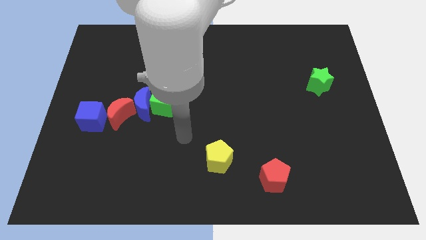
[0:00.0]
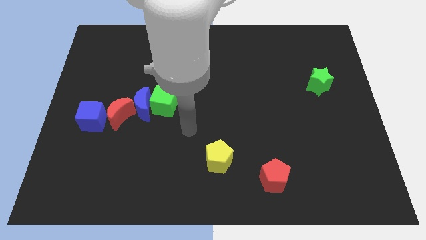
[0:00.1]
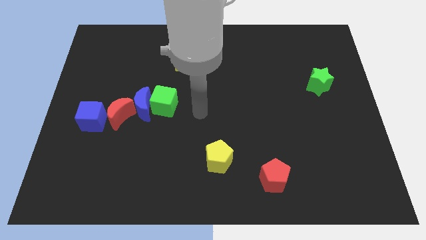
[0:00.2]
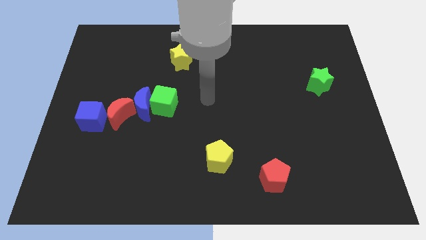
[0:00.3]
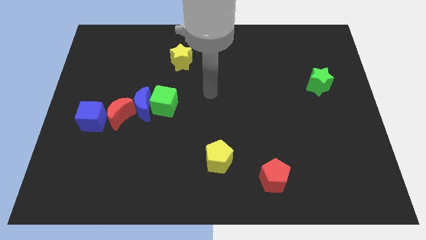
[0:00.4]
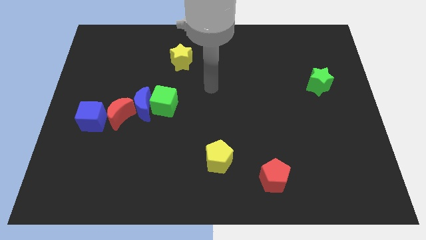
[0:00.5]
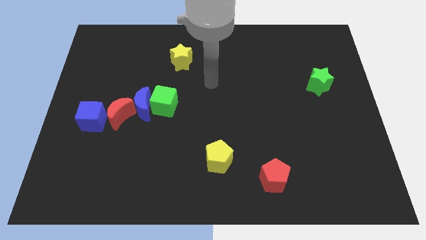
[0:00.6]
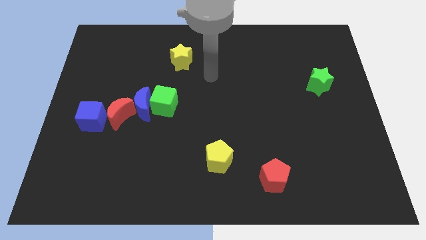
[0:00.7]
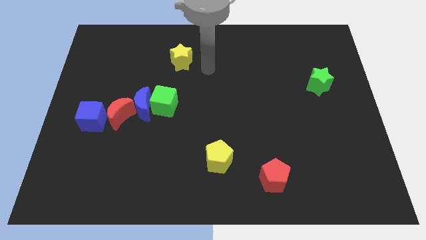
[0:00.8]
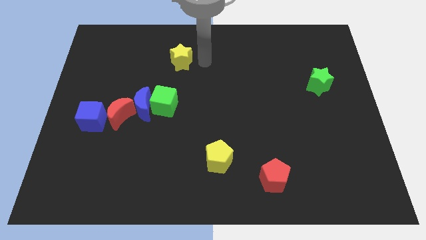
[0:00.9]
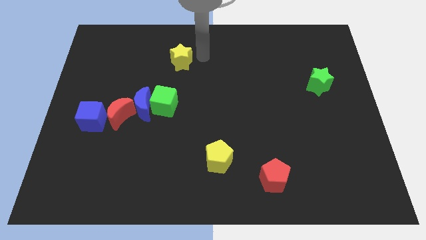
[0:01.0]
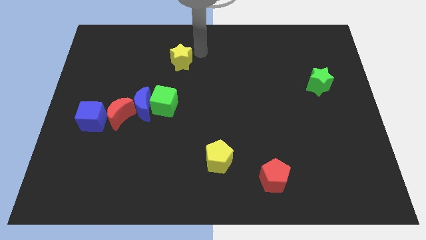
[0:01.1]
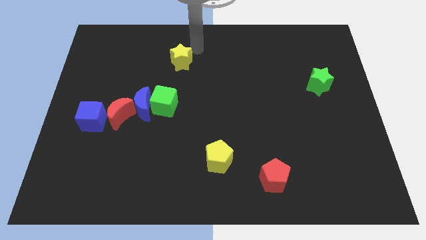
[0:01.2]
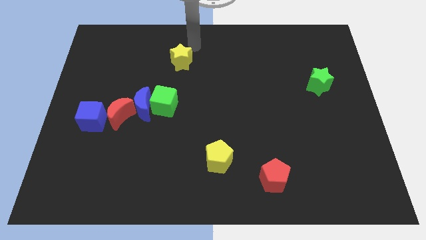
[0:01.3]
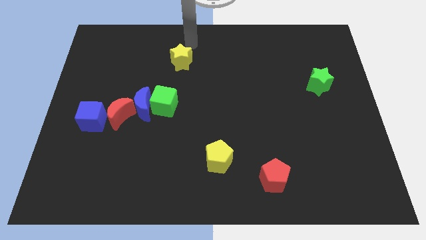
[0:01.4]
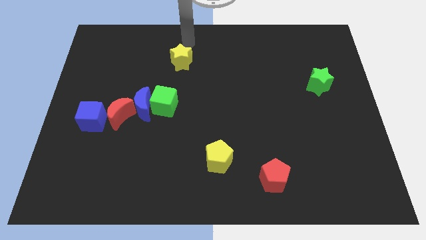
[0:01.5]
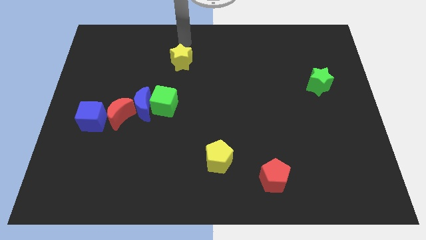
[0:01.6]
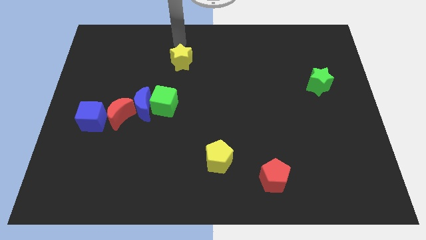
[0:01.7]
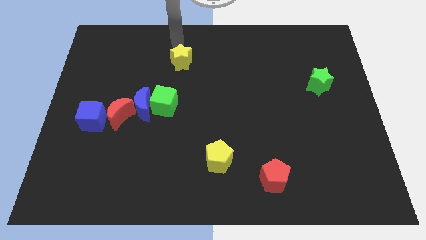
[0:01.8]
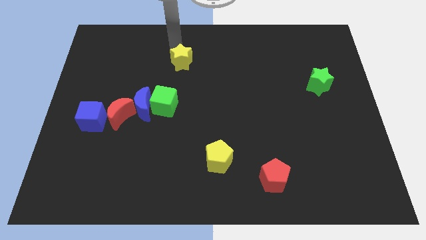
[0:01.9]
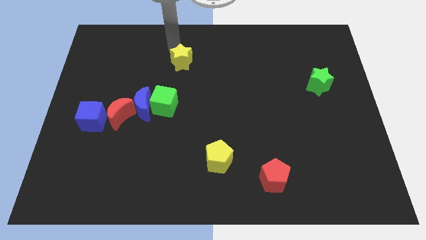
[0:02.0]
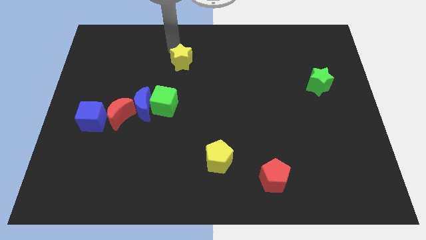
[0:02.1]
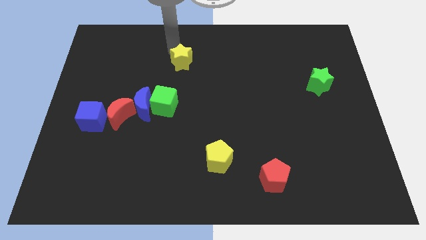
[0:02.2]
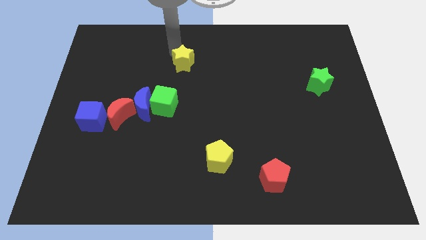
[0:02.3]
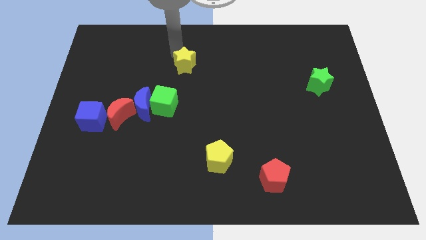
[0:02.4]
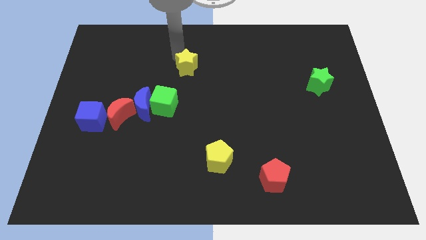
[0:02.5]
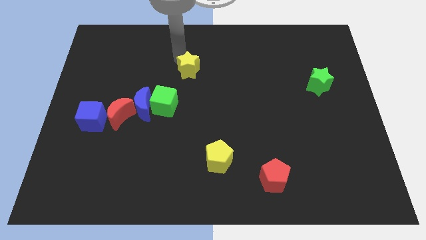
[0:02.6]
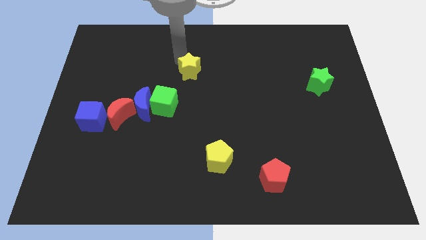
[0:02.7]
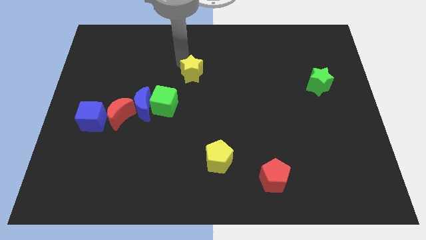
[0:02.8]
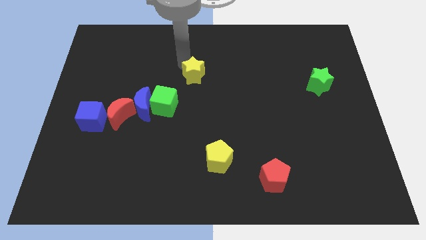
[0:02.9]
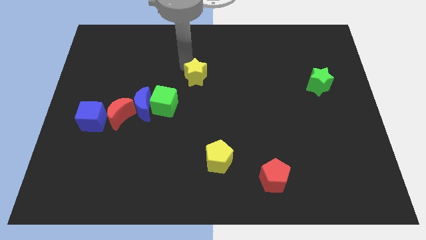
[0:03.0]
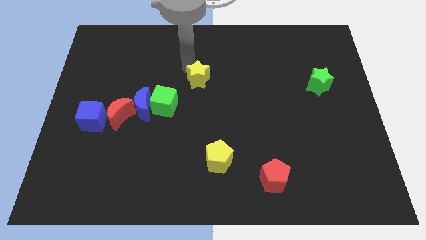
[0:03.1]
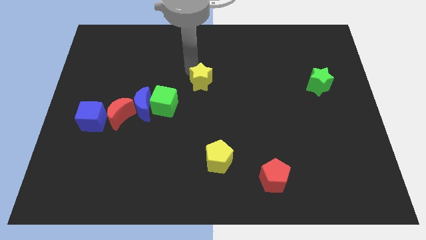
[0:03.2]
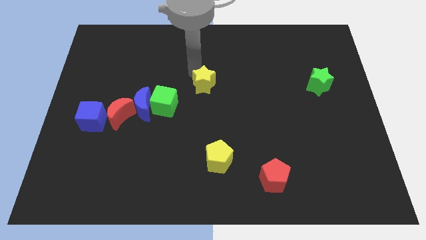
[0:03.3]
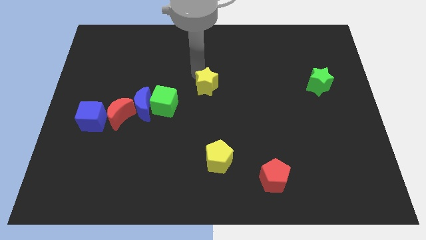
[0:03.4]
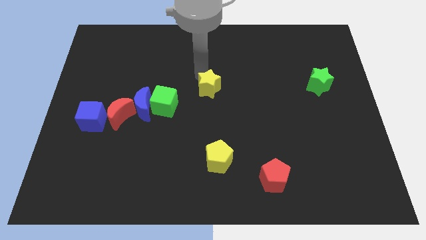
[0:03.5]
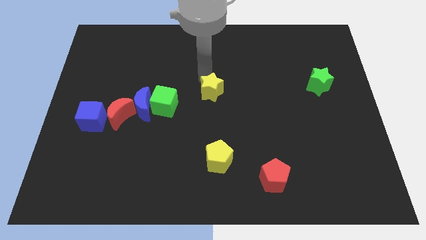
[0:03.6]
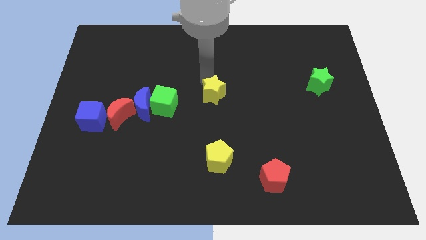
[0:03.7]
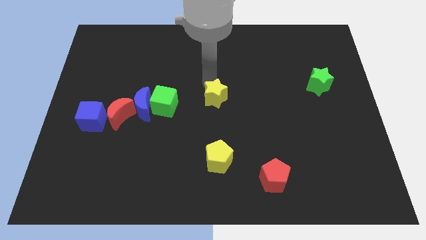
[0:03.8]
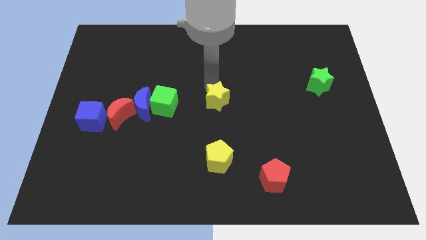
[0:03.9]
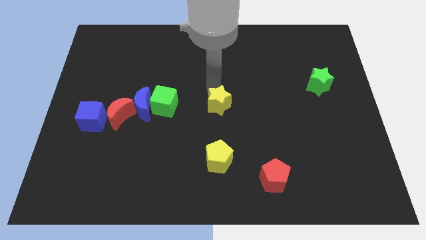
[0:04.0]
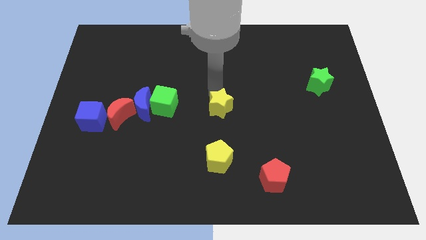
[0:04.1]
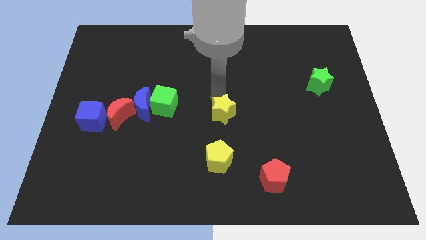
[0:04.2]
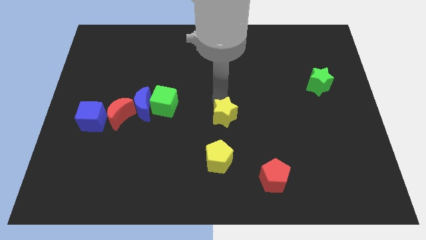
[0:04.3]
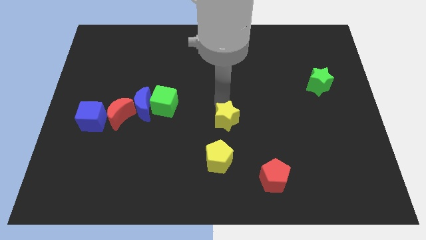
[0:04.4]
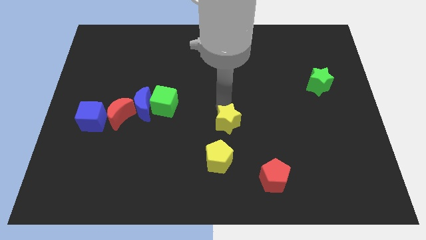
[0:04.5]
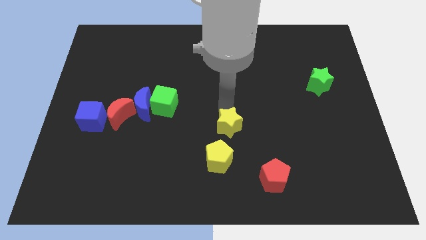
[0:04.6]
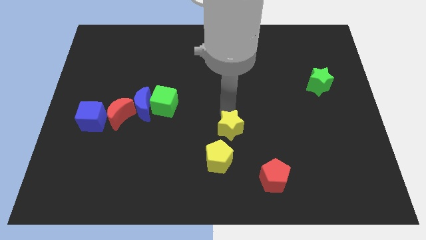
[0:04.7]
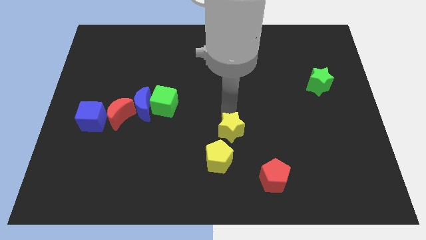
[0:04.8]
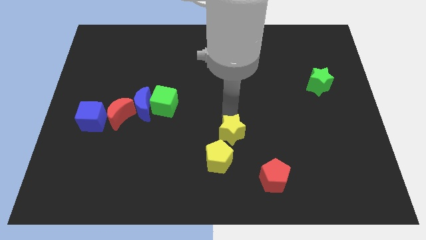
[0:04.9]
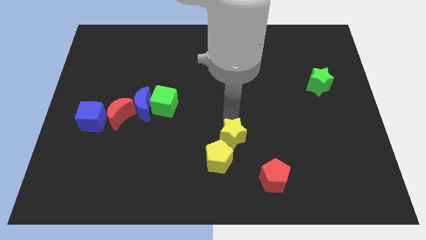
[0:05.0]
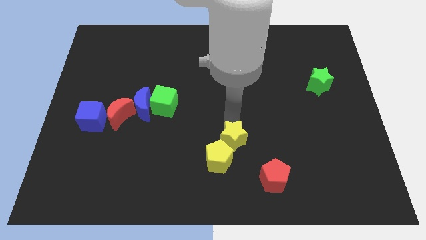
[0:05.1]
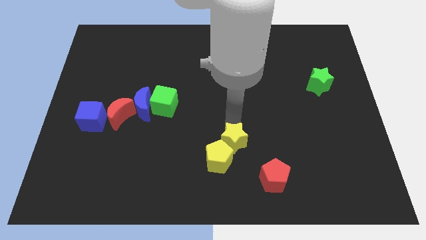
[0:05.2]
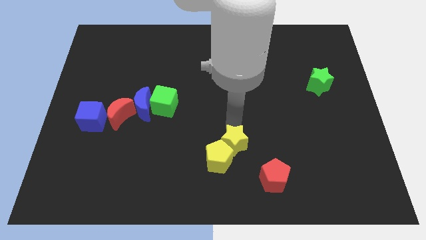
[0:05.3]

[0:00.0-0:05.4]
push the yellow star towards the yellow pentagon

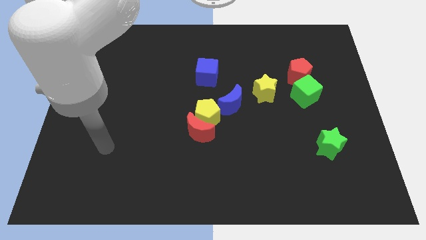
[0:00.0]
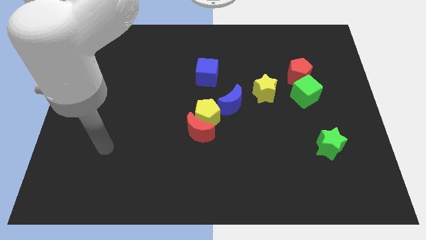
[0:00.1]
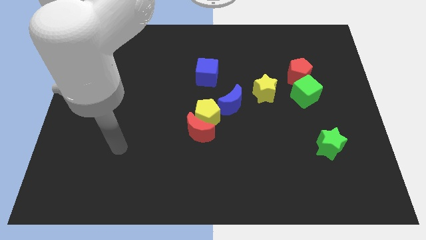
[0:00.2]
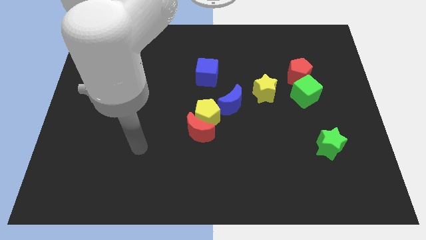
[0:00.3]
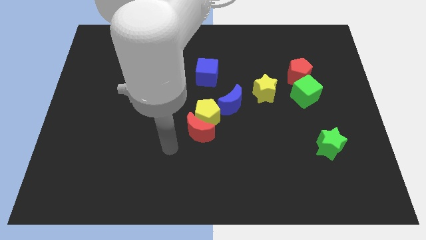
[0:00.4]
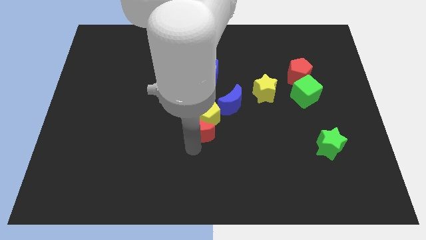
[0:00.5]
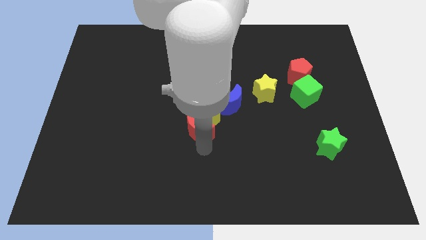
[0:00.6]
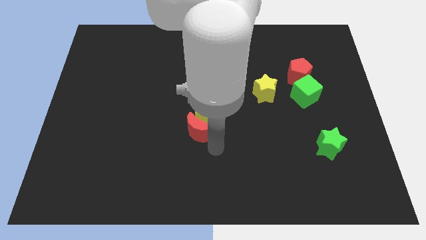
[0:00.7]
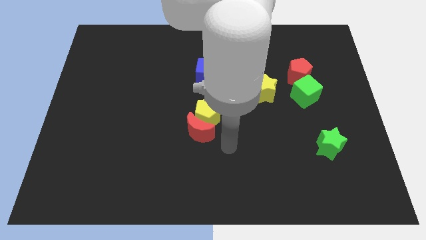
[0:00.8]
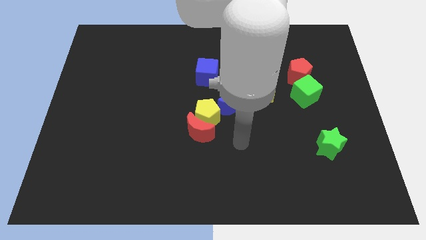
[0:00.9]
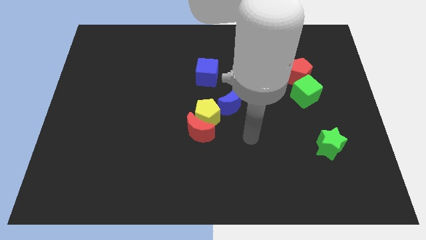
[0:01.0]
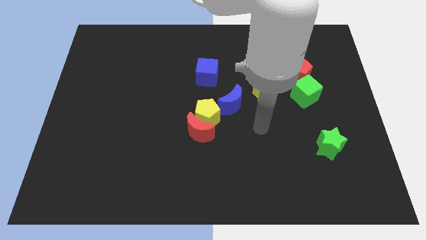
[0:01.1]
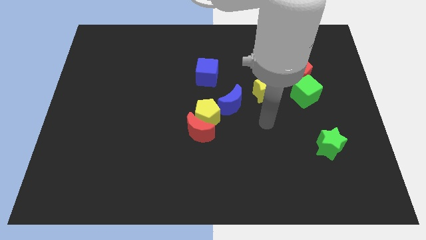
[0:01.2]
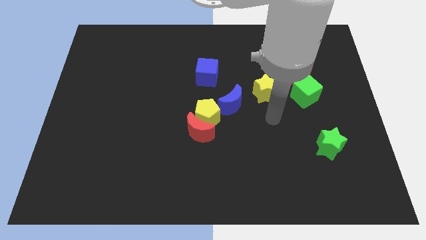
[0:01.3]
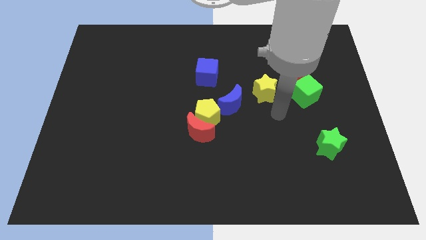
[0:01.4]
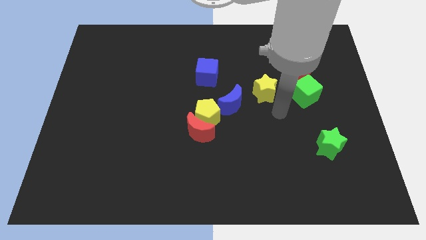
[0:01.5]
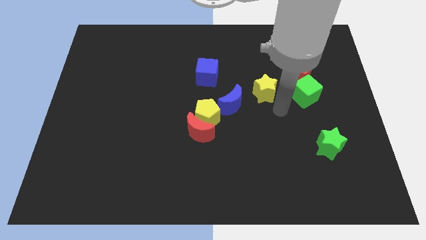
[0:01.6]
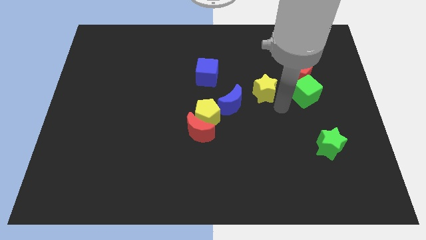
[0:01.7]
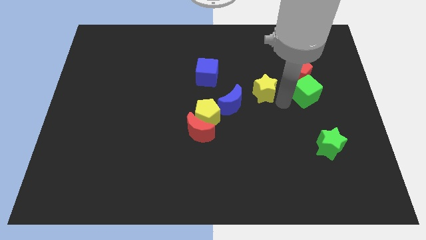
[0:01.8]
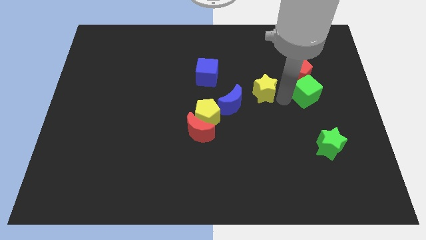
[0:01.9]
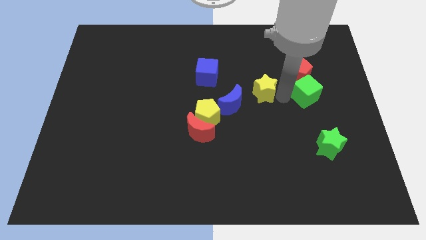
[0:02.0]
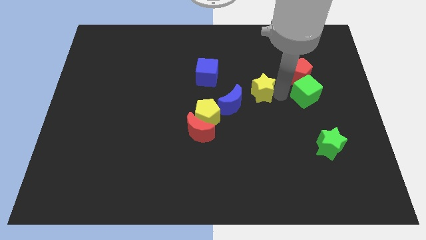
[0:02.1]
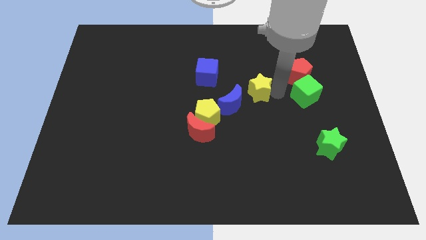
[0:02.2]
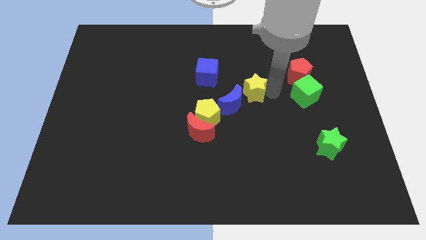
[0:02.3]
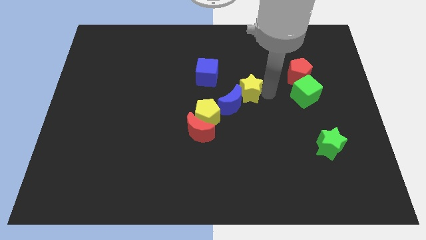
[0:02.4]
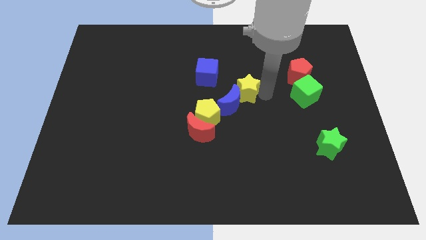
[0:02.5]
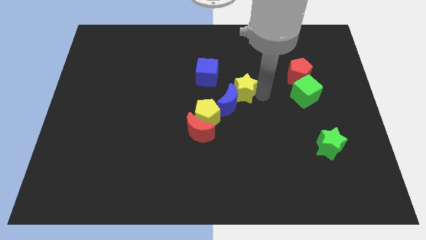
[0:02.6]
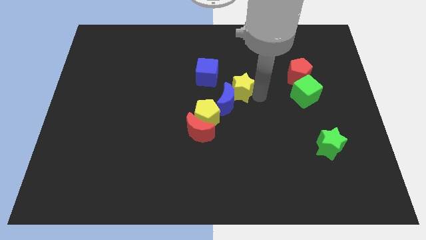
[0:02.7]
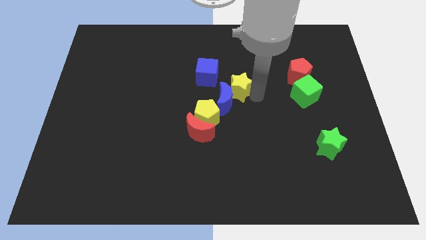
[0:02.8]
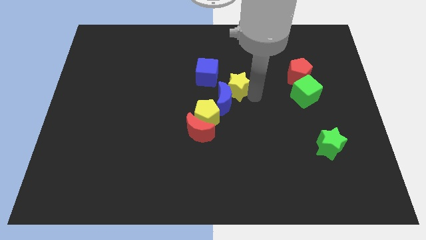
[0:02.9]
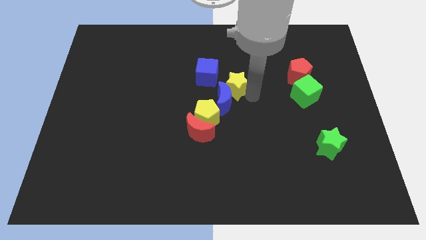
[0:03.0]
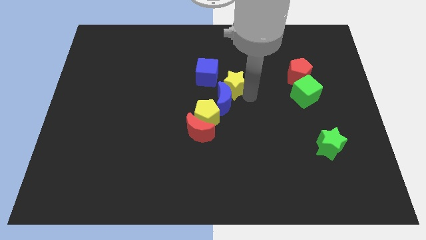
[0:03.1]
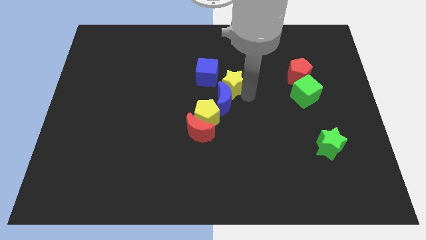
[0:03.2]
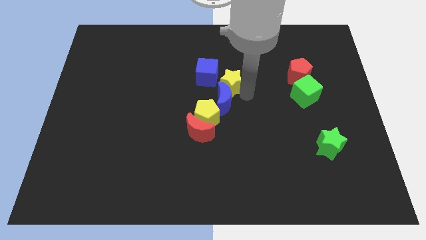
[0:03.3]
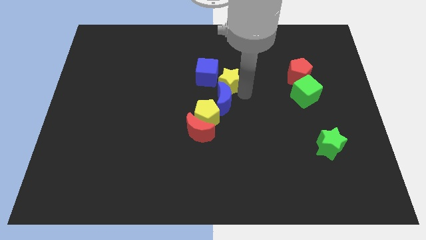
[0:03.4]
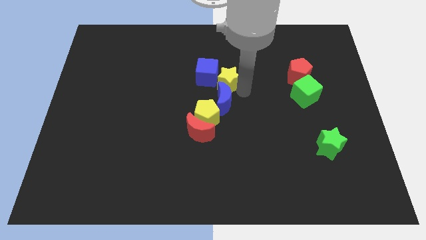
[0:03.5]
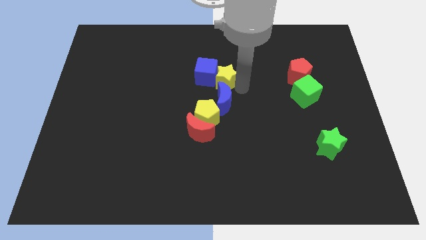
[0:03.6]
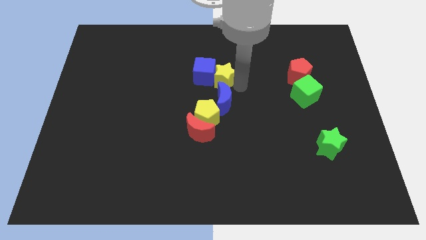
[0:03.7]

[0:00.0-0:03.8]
push the yellow star next to the blue cube
